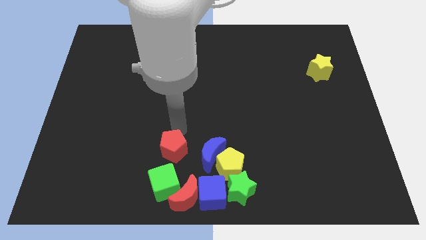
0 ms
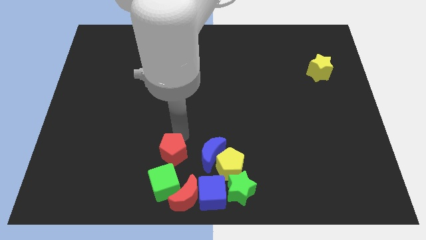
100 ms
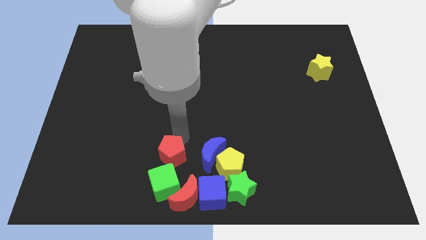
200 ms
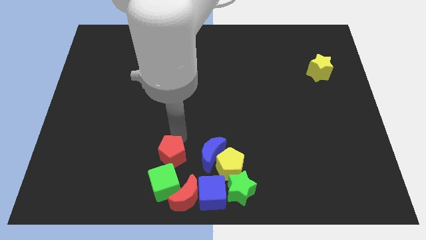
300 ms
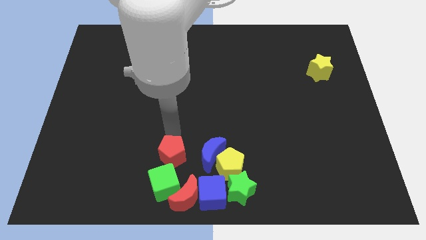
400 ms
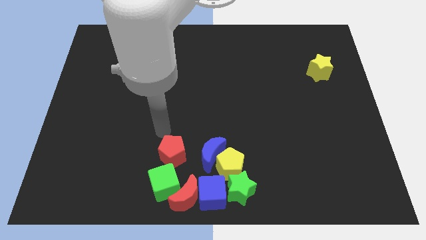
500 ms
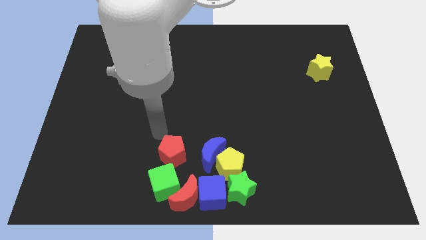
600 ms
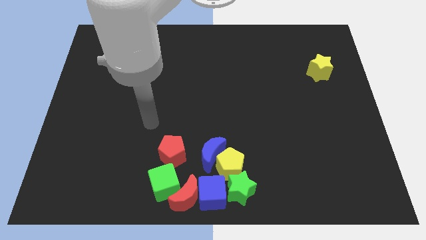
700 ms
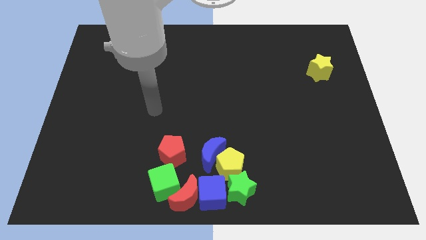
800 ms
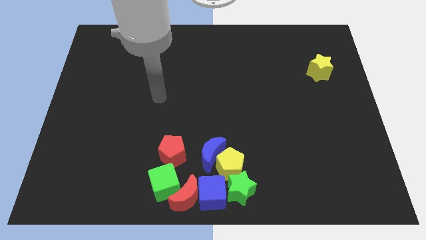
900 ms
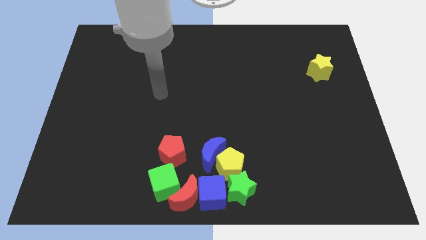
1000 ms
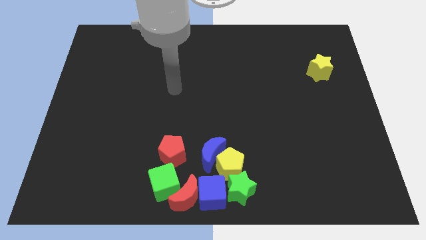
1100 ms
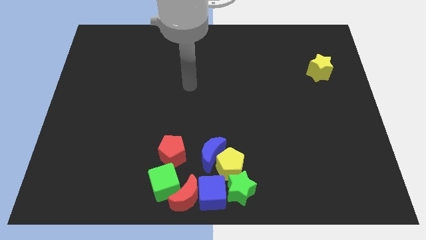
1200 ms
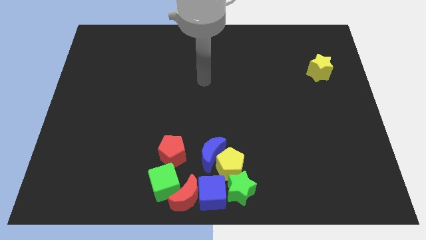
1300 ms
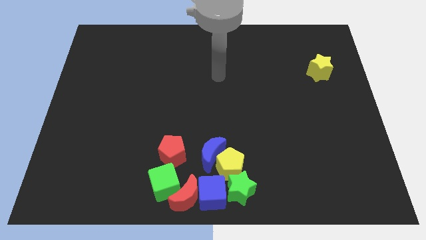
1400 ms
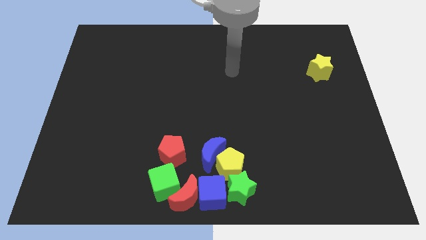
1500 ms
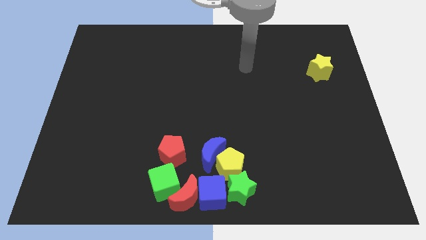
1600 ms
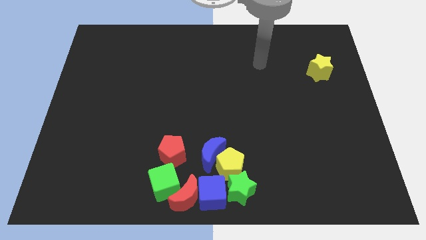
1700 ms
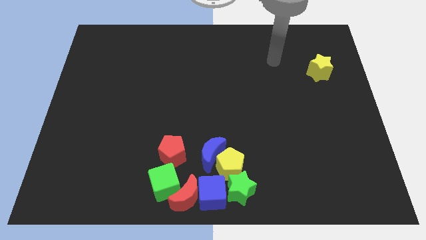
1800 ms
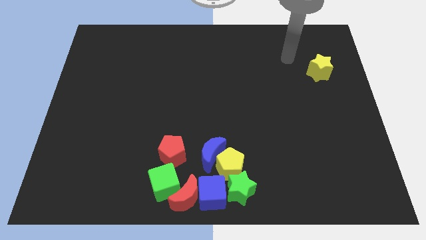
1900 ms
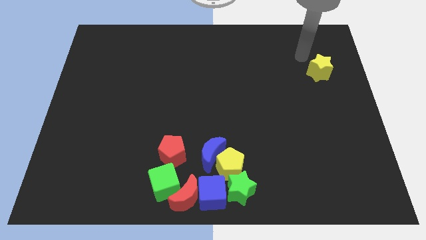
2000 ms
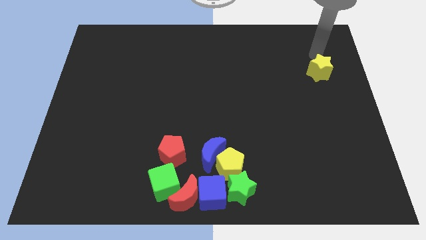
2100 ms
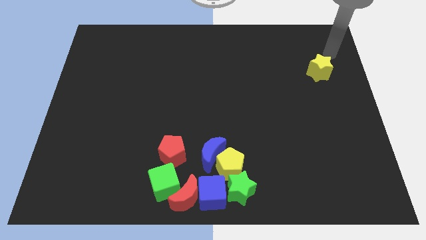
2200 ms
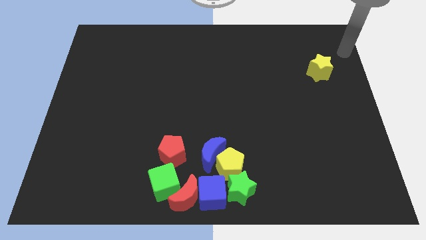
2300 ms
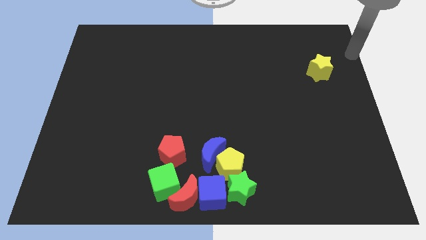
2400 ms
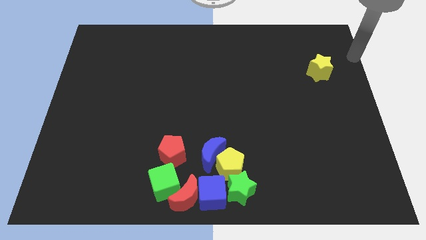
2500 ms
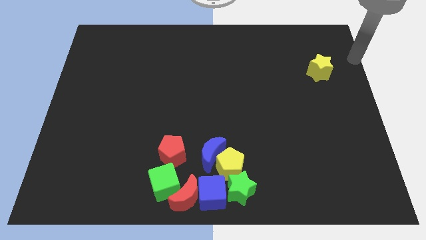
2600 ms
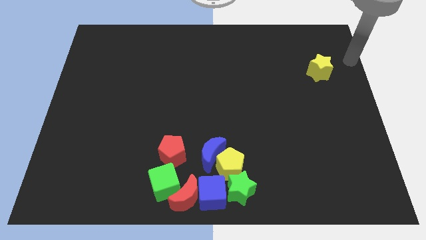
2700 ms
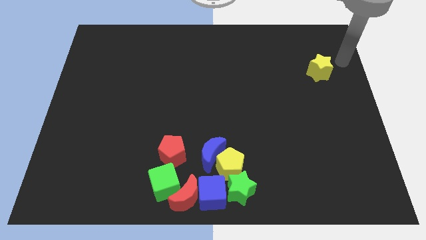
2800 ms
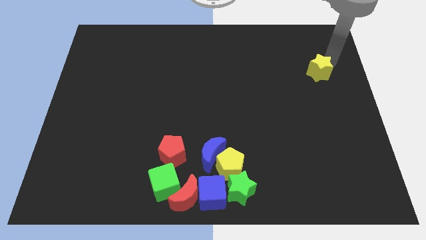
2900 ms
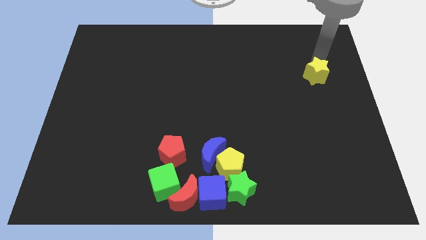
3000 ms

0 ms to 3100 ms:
touch the yellow star with your arm

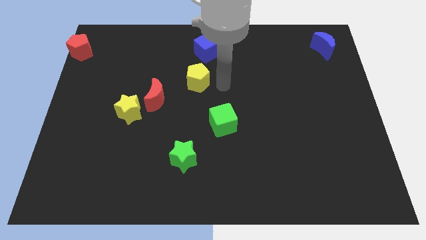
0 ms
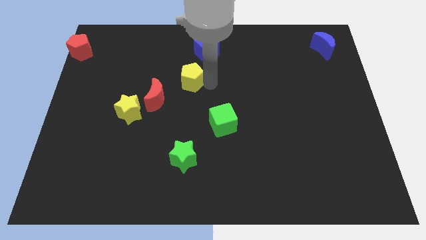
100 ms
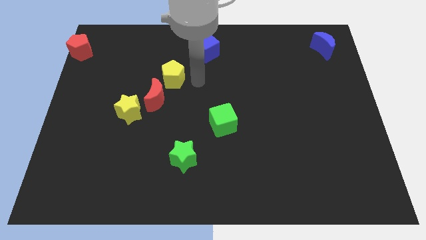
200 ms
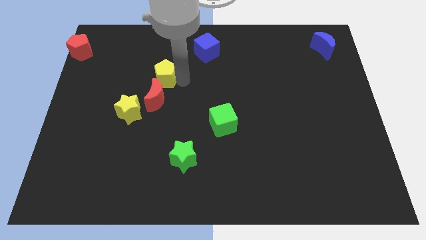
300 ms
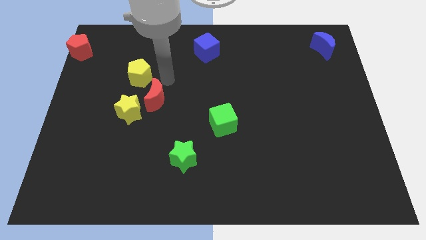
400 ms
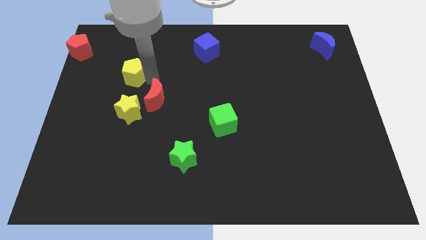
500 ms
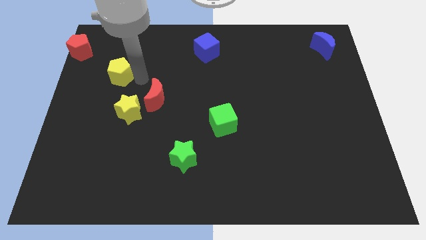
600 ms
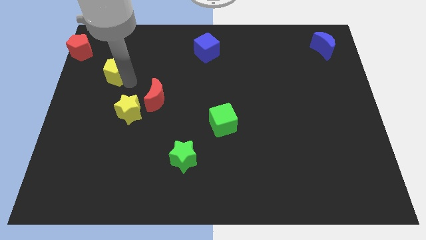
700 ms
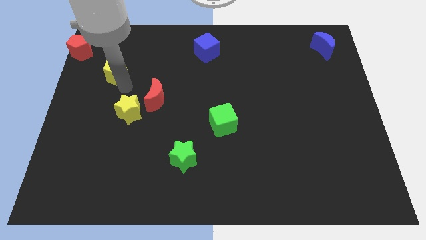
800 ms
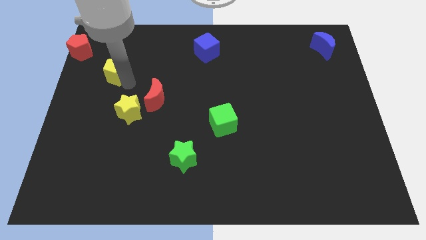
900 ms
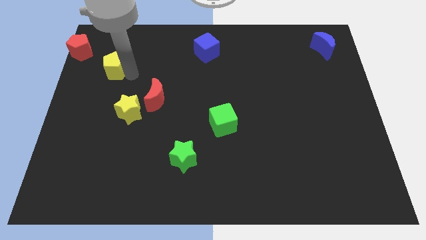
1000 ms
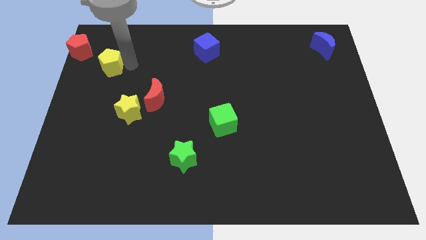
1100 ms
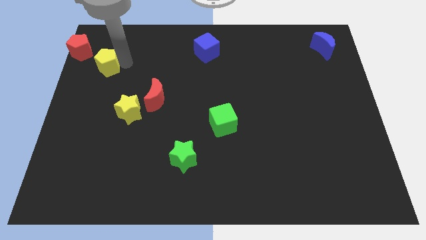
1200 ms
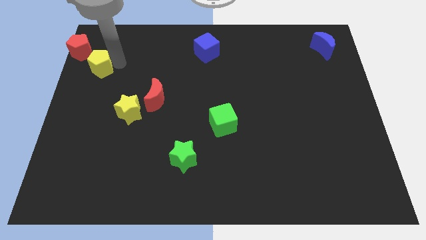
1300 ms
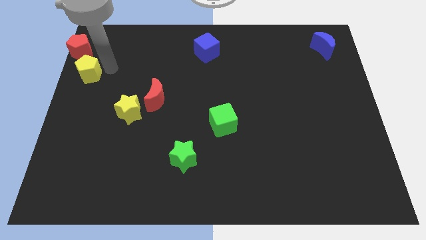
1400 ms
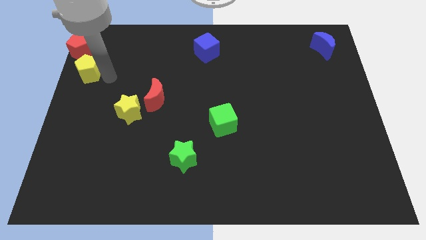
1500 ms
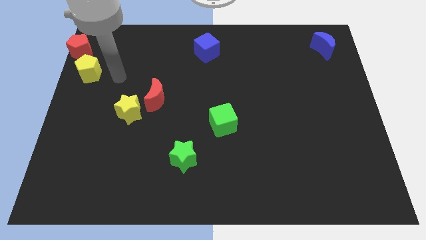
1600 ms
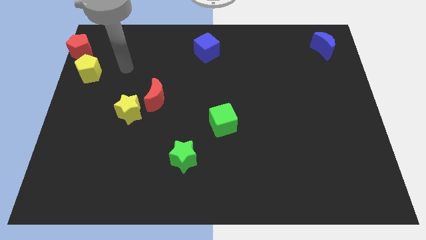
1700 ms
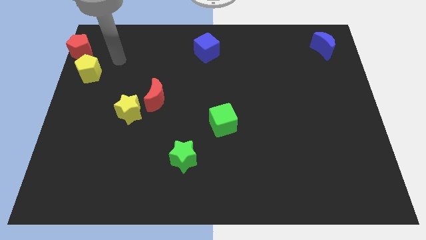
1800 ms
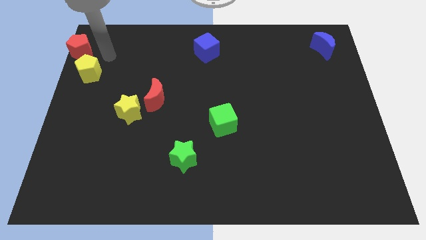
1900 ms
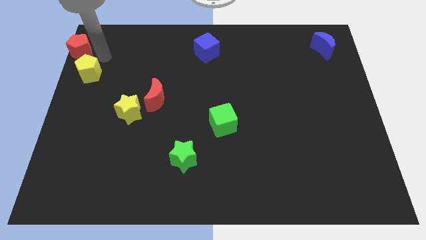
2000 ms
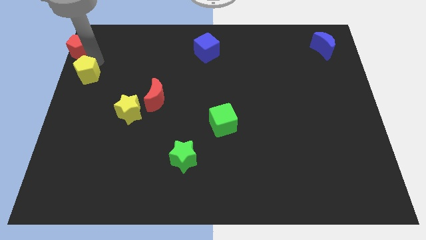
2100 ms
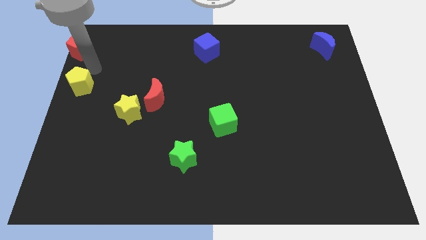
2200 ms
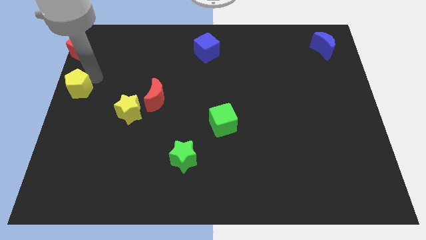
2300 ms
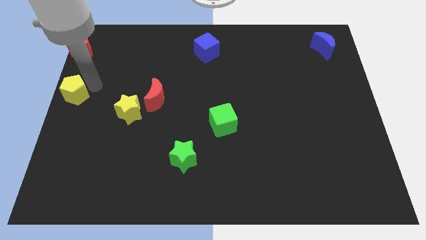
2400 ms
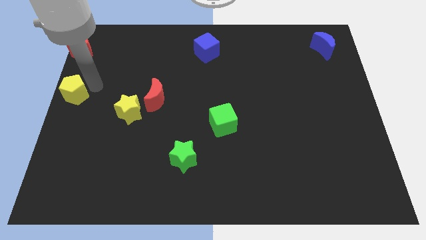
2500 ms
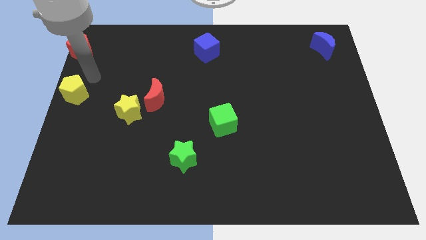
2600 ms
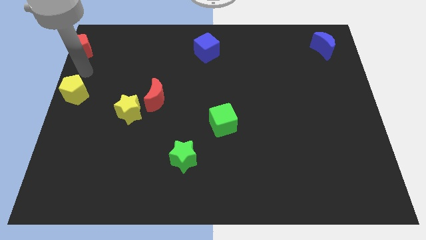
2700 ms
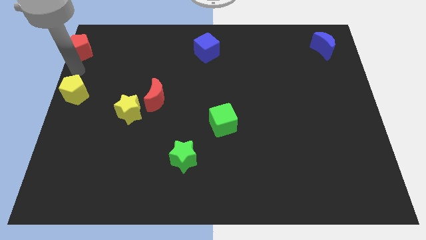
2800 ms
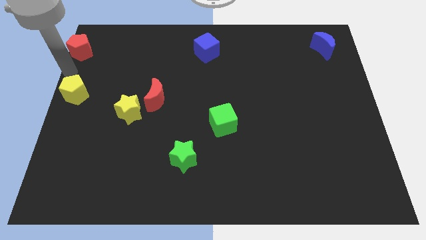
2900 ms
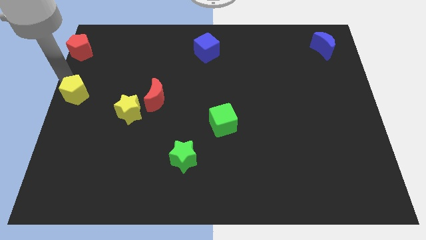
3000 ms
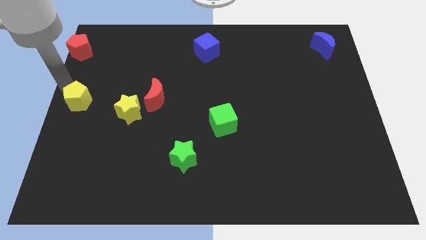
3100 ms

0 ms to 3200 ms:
move yellow pentagon to the left center of the board

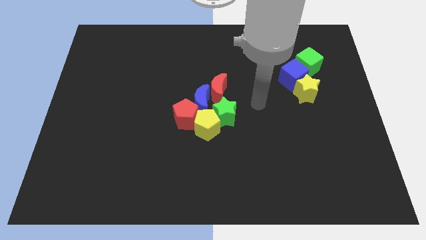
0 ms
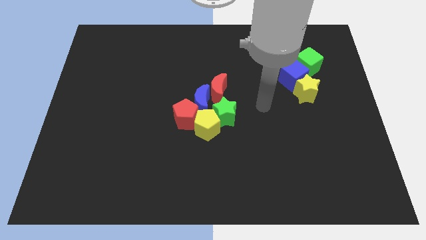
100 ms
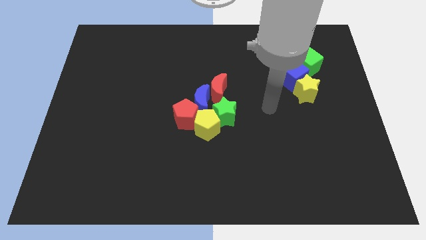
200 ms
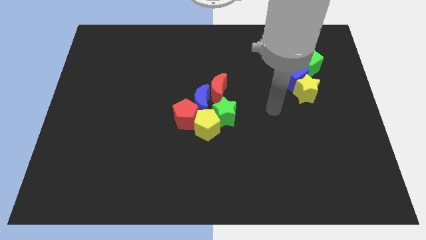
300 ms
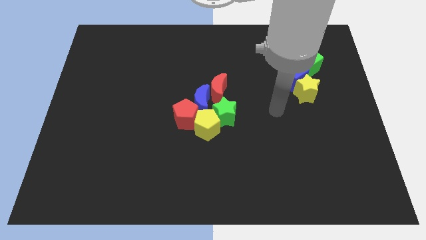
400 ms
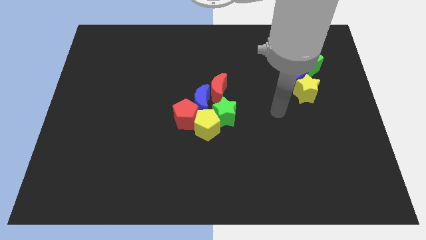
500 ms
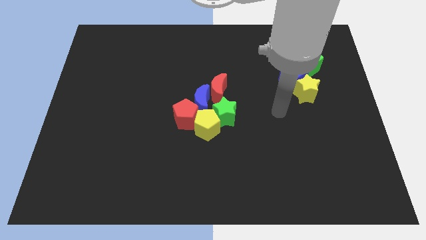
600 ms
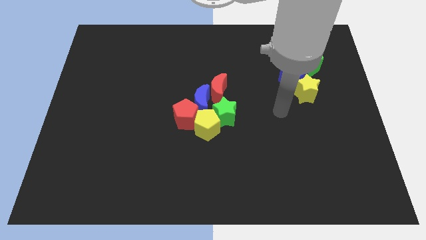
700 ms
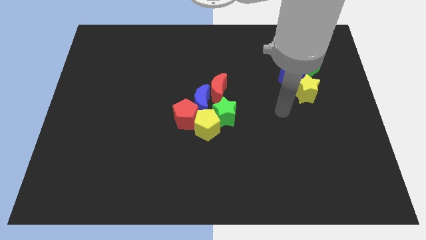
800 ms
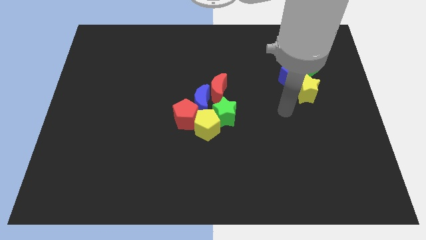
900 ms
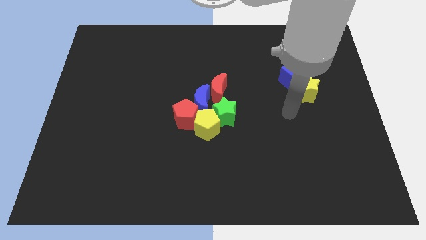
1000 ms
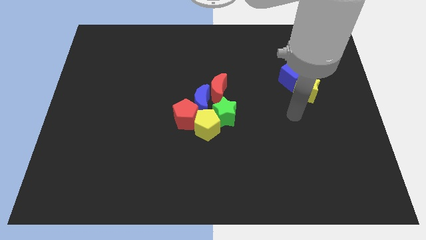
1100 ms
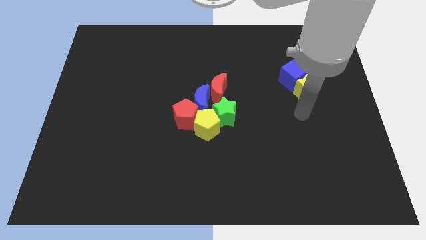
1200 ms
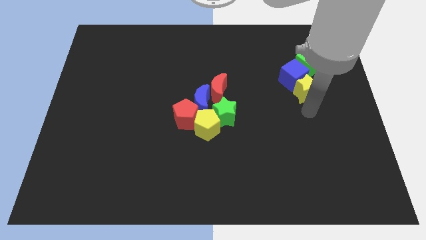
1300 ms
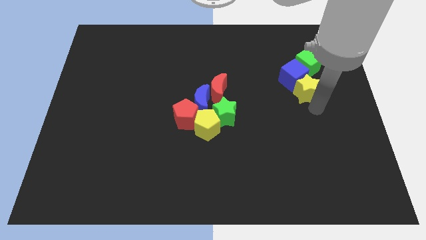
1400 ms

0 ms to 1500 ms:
move the arm towards the yellow star

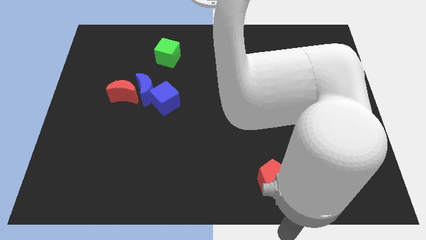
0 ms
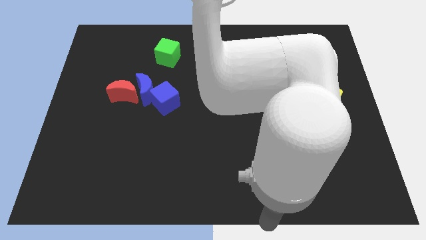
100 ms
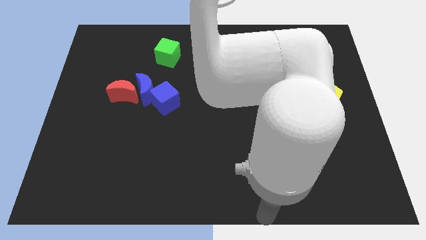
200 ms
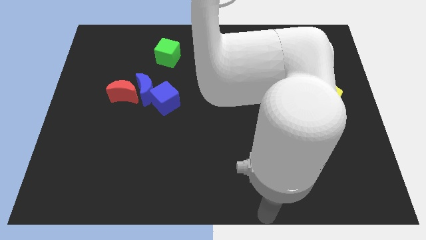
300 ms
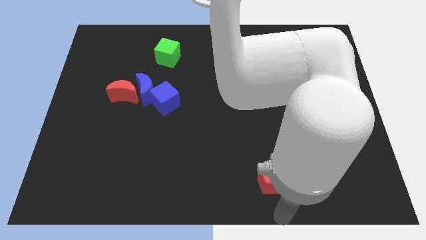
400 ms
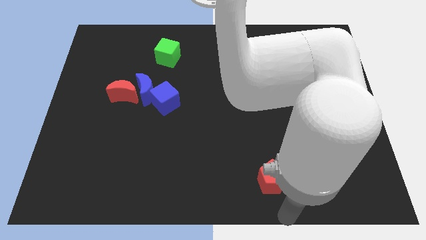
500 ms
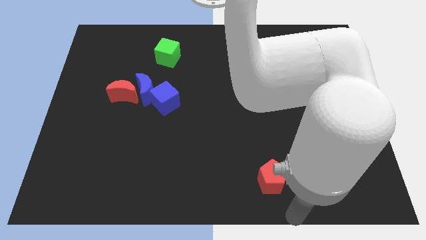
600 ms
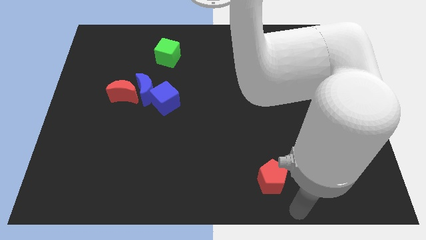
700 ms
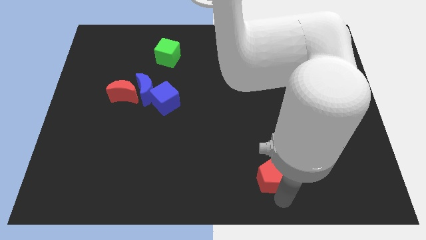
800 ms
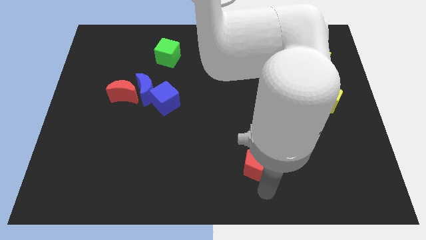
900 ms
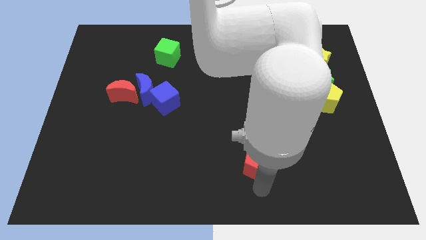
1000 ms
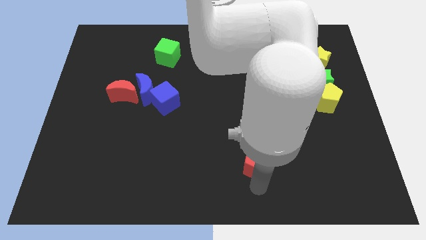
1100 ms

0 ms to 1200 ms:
push red pentagon slightly to the center of the board
